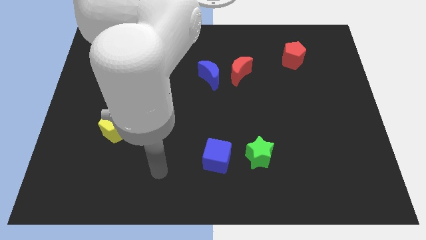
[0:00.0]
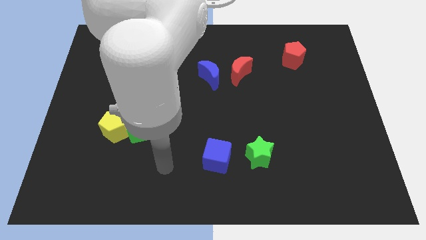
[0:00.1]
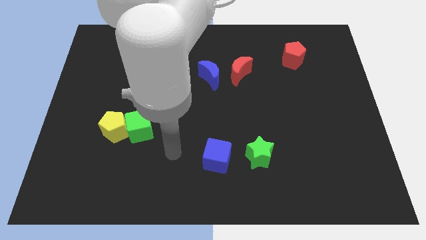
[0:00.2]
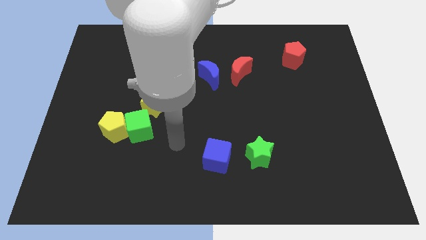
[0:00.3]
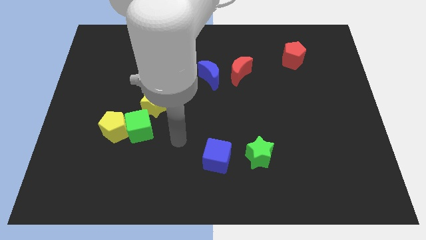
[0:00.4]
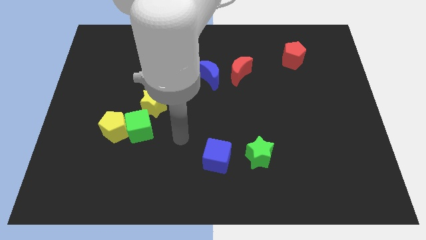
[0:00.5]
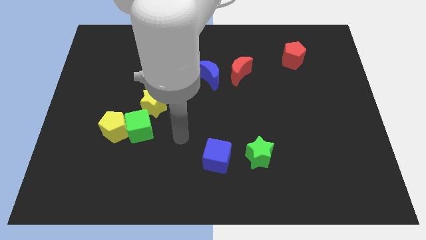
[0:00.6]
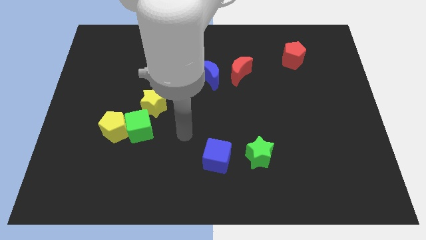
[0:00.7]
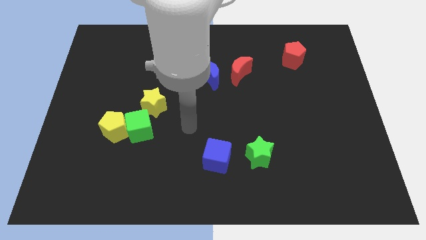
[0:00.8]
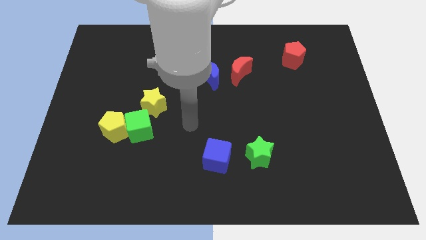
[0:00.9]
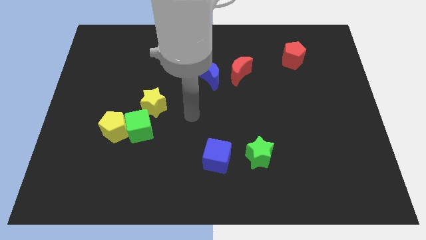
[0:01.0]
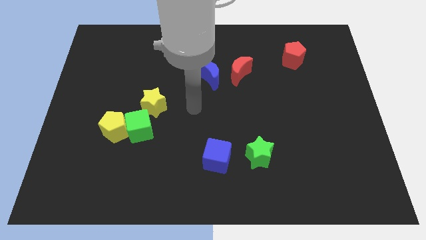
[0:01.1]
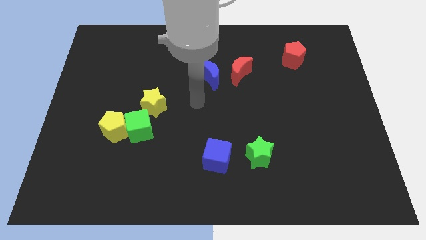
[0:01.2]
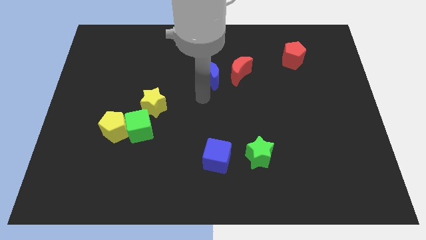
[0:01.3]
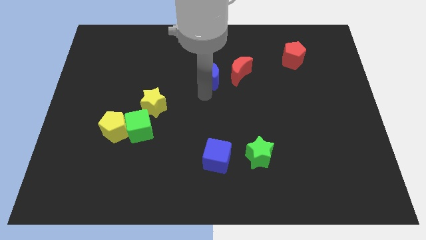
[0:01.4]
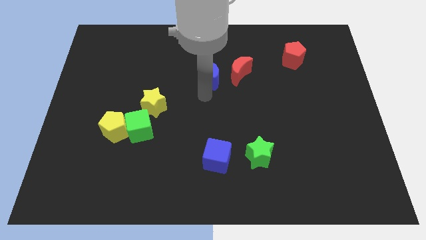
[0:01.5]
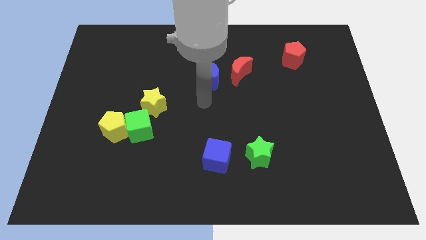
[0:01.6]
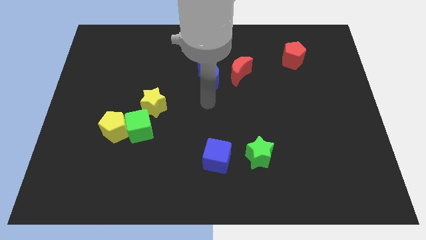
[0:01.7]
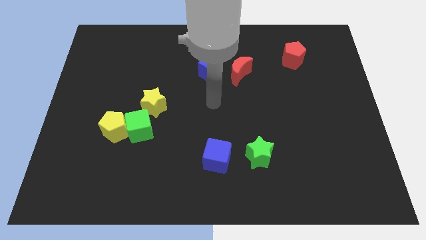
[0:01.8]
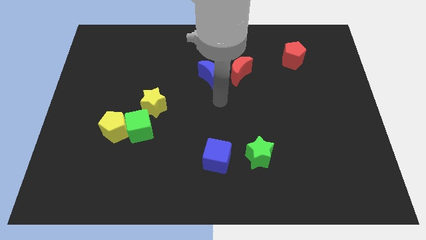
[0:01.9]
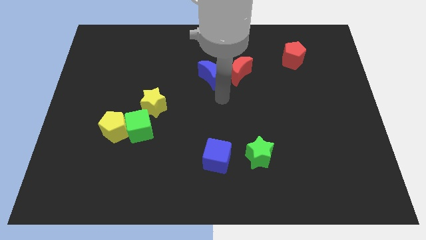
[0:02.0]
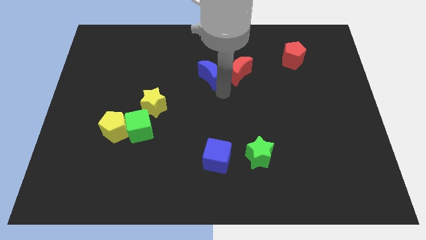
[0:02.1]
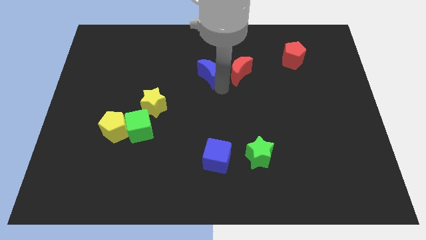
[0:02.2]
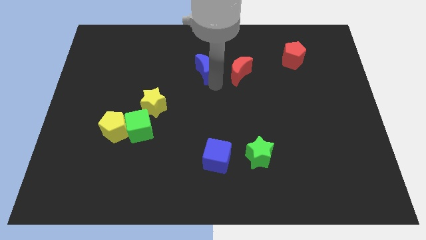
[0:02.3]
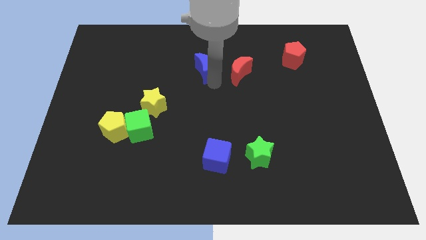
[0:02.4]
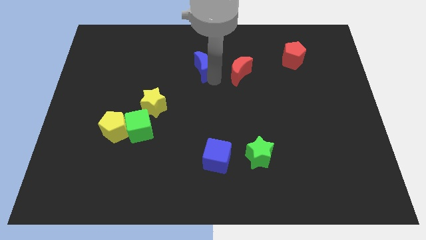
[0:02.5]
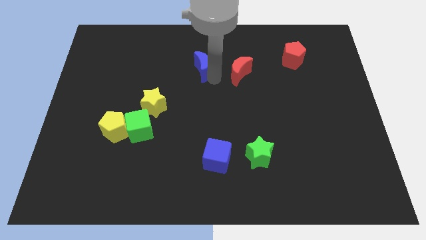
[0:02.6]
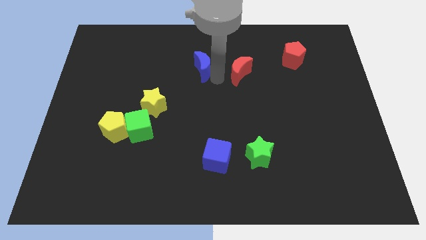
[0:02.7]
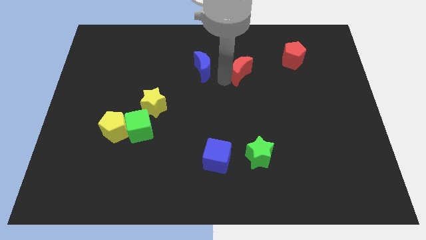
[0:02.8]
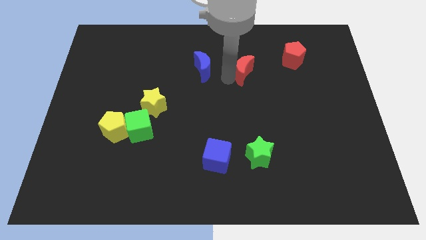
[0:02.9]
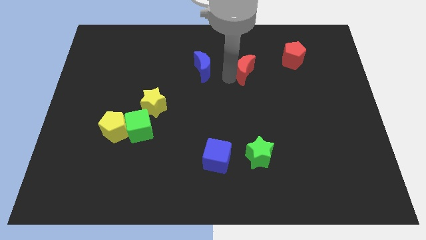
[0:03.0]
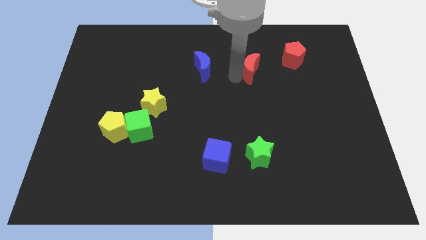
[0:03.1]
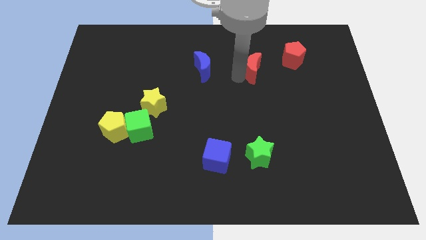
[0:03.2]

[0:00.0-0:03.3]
push the blue and red crescents in opposite directions

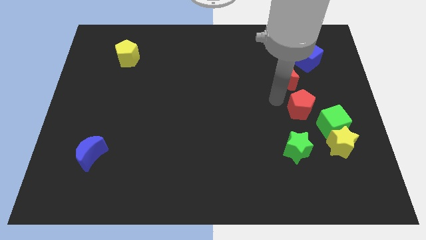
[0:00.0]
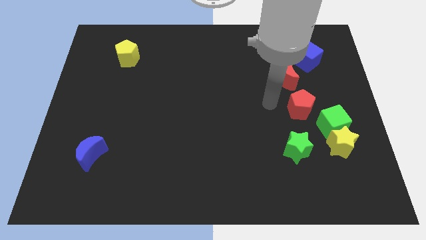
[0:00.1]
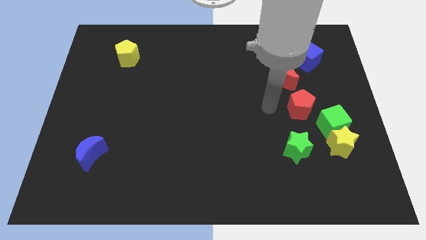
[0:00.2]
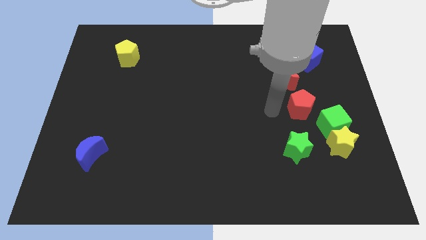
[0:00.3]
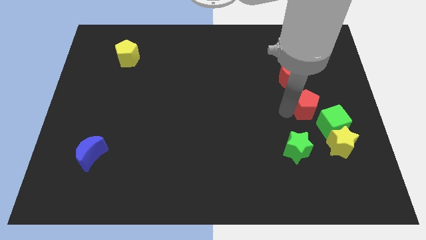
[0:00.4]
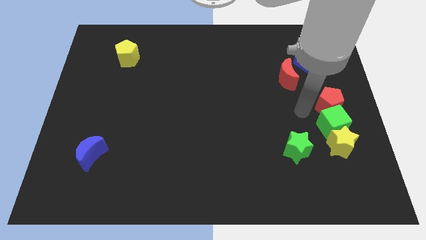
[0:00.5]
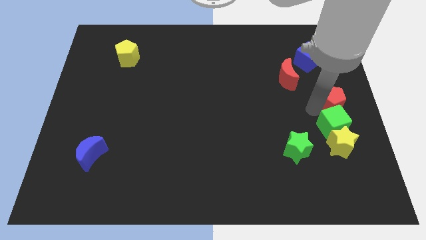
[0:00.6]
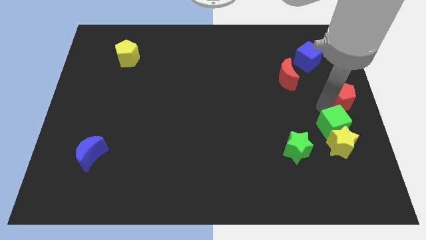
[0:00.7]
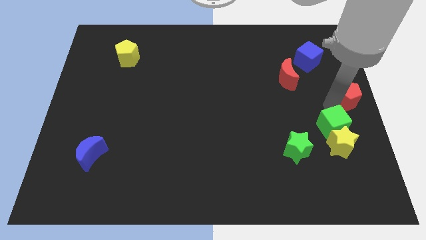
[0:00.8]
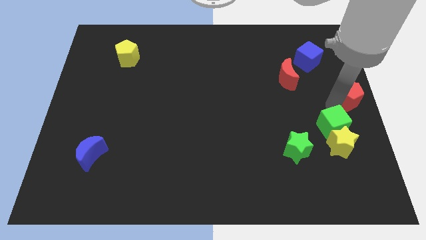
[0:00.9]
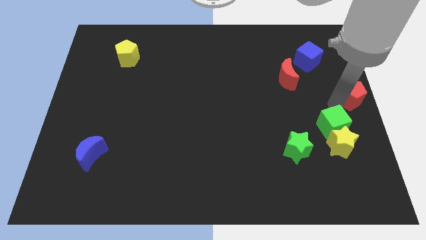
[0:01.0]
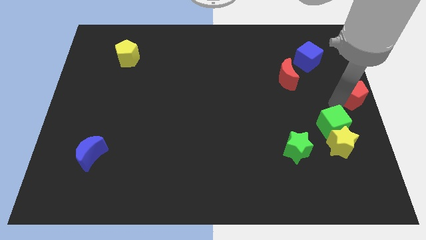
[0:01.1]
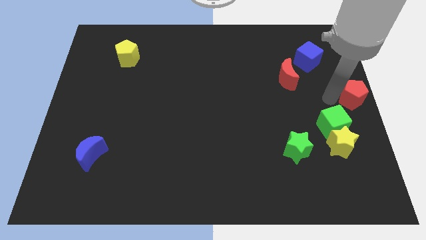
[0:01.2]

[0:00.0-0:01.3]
move the red pentagon to the center right

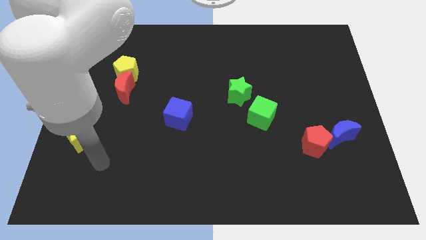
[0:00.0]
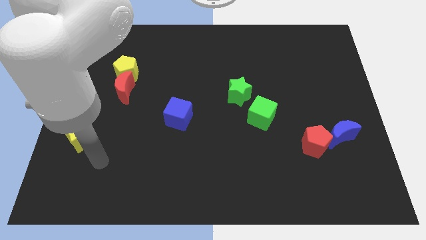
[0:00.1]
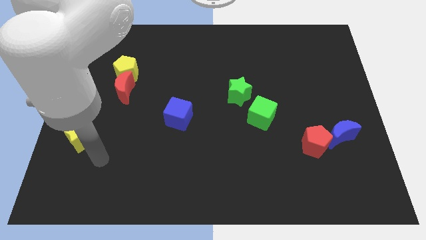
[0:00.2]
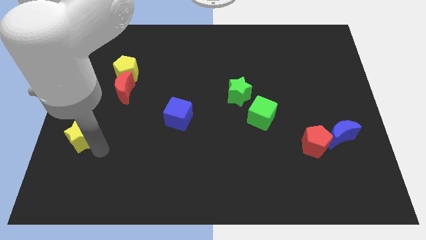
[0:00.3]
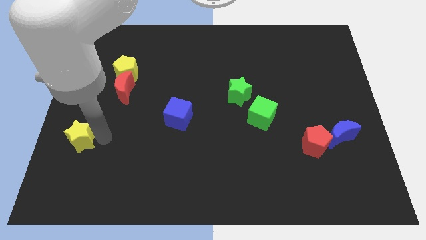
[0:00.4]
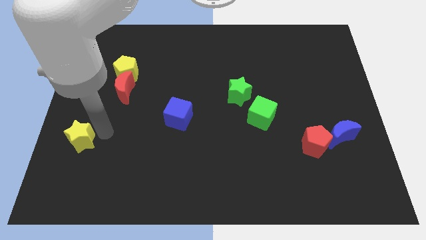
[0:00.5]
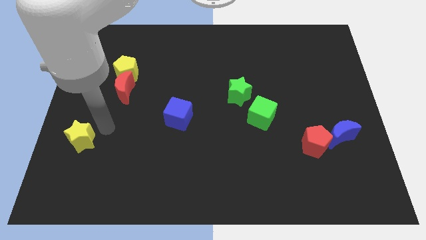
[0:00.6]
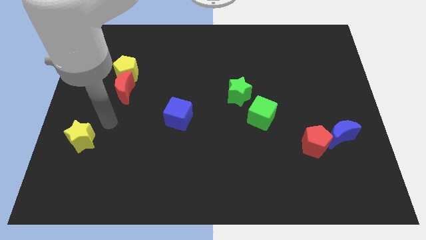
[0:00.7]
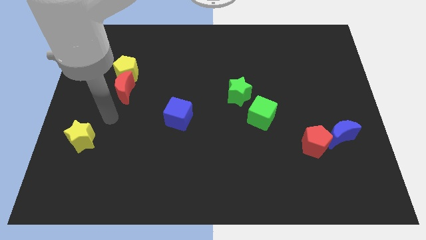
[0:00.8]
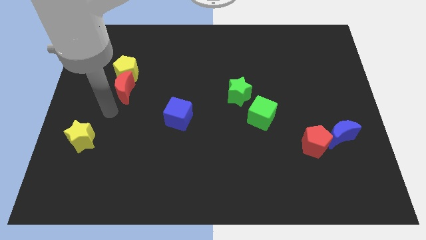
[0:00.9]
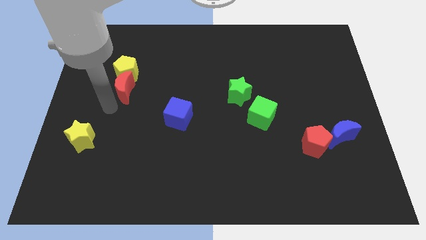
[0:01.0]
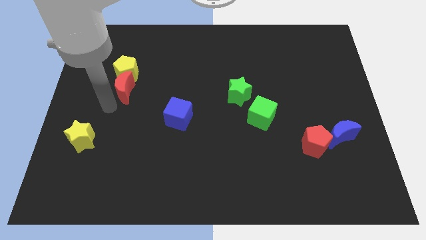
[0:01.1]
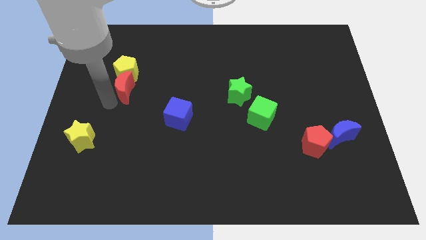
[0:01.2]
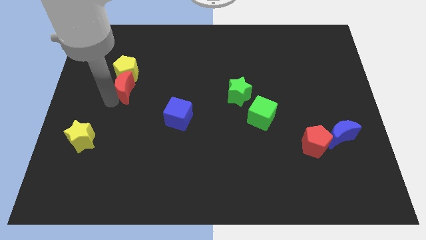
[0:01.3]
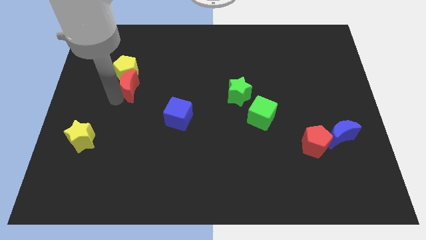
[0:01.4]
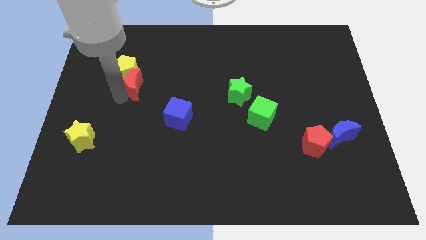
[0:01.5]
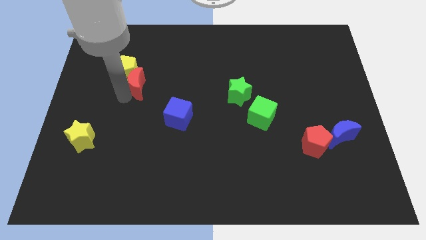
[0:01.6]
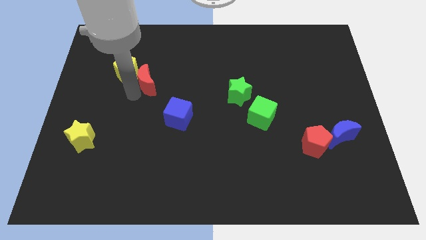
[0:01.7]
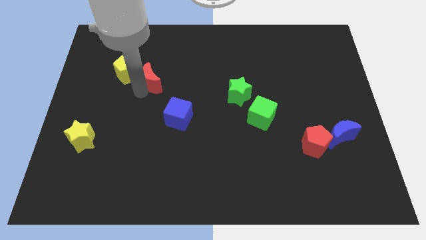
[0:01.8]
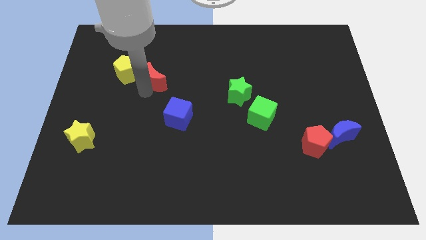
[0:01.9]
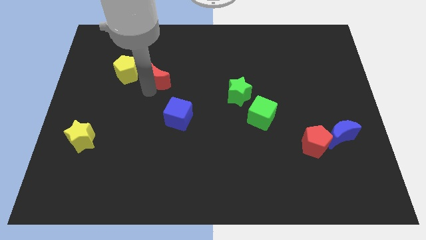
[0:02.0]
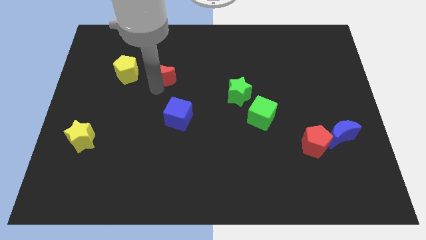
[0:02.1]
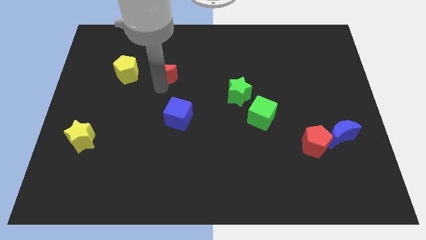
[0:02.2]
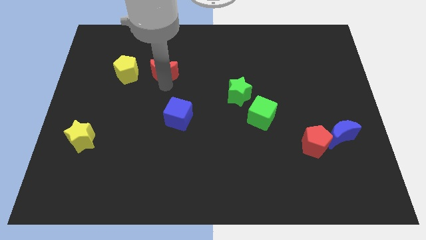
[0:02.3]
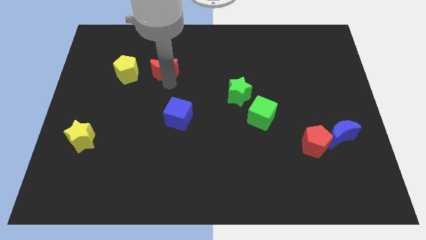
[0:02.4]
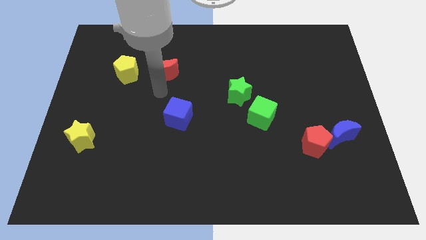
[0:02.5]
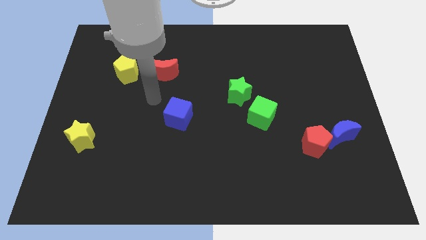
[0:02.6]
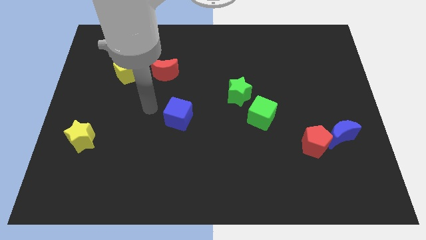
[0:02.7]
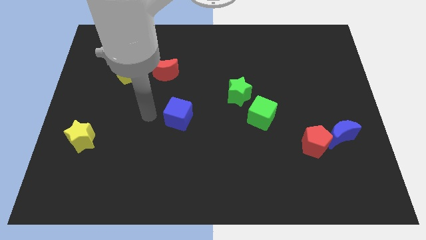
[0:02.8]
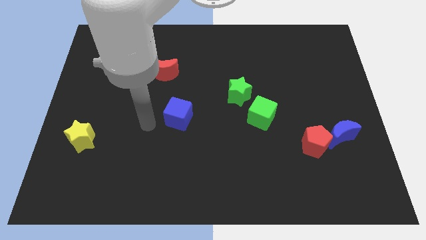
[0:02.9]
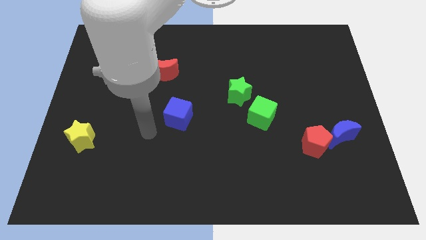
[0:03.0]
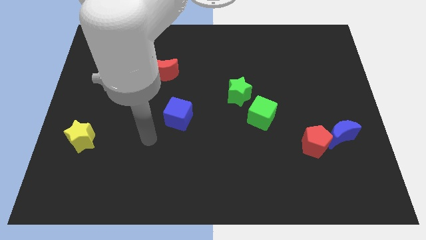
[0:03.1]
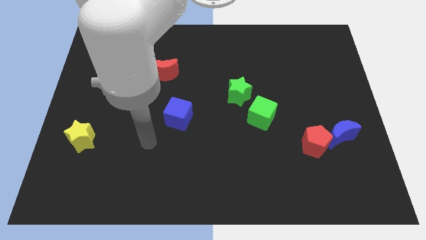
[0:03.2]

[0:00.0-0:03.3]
move the red crescent right to the yellow pentagon

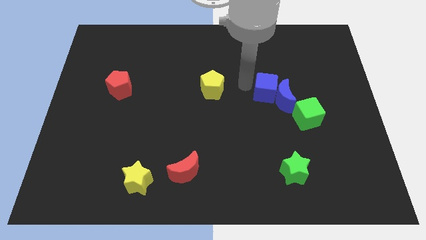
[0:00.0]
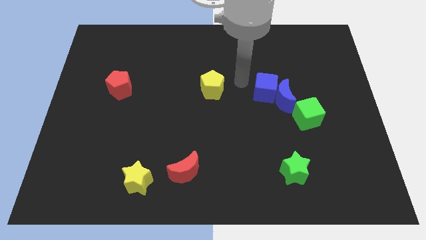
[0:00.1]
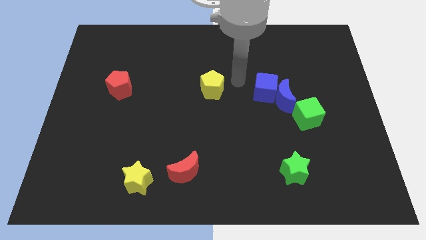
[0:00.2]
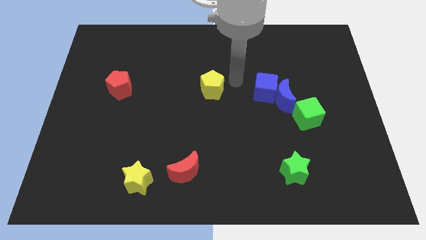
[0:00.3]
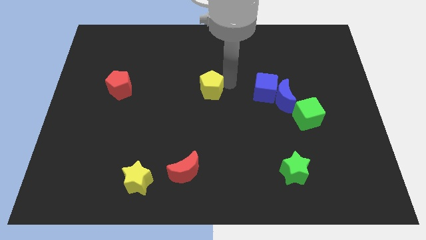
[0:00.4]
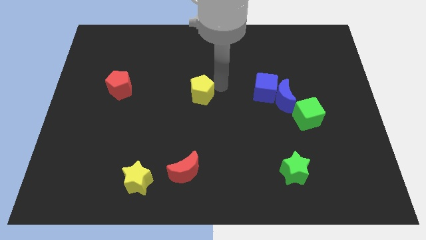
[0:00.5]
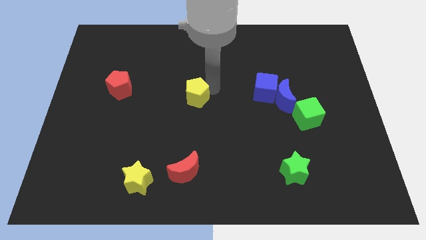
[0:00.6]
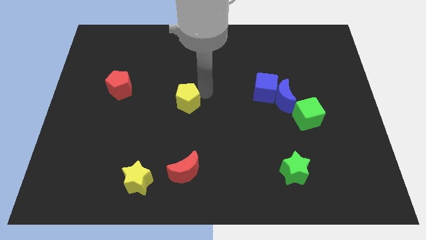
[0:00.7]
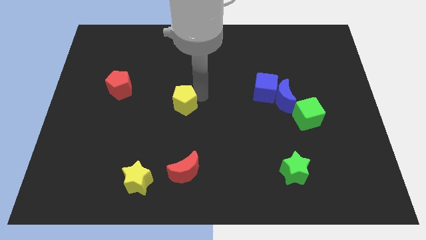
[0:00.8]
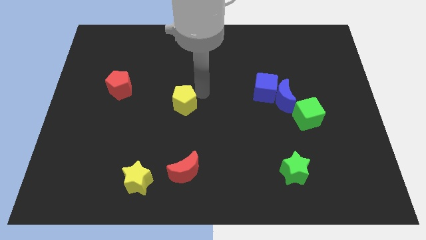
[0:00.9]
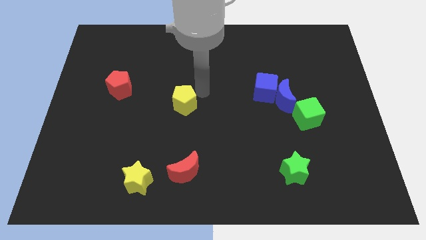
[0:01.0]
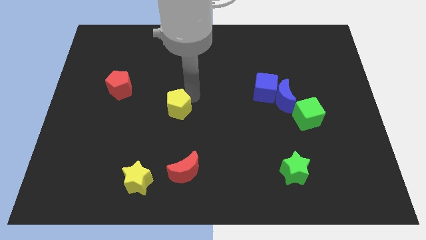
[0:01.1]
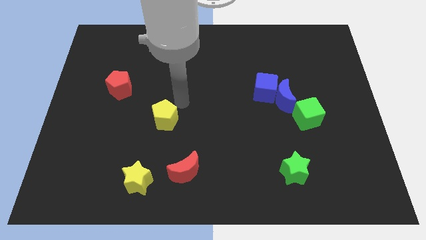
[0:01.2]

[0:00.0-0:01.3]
place yellow pentagon parallel to blue moon
